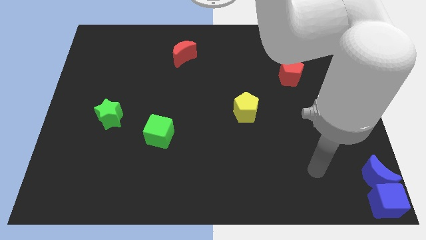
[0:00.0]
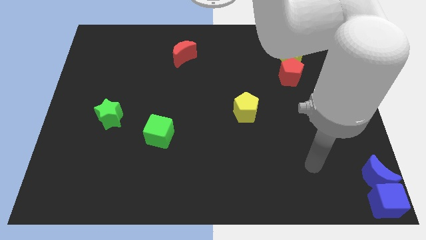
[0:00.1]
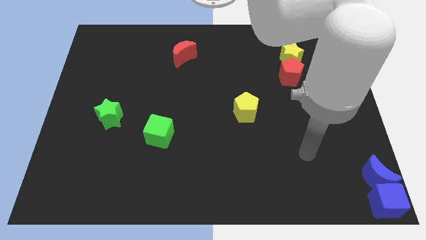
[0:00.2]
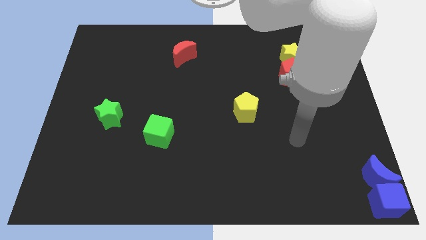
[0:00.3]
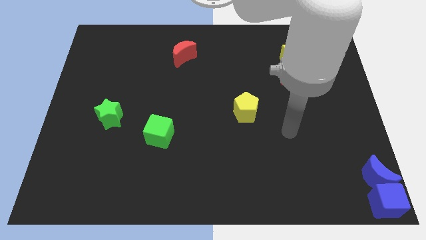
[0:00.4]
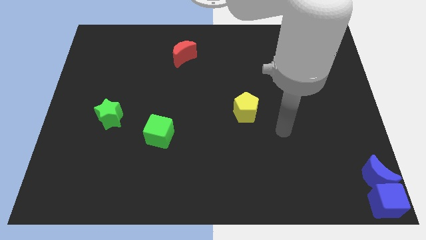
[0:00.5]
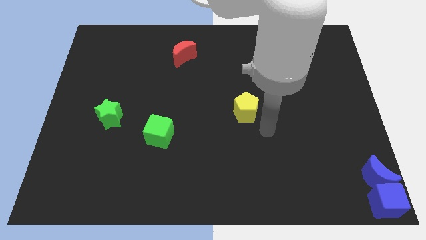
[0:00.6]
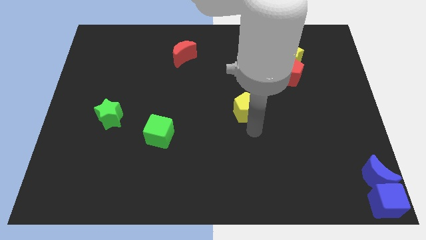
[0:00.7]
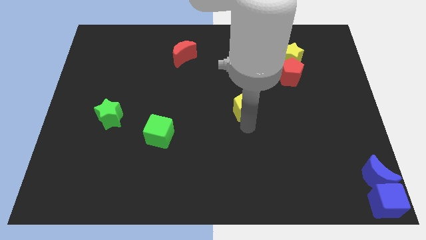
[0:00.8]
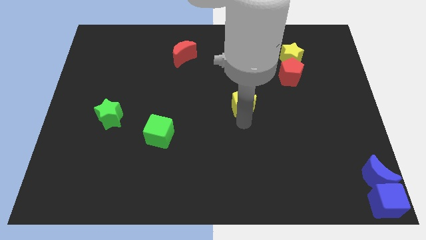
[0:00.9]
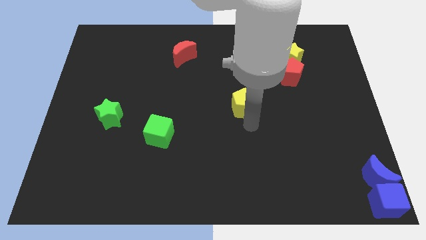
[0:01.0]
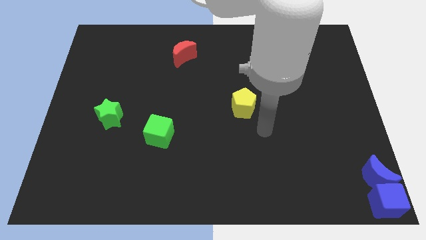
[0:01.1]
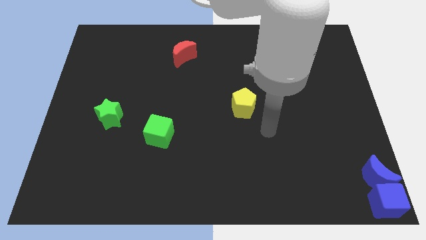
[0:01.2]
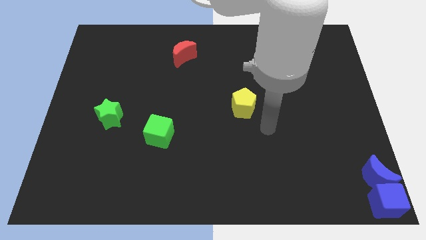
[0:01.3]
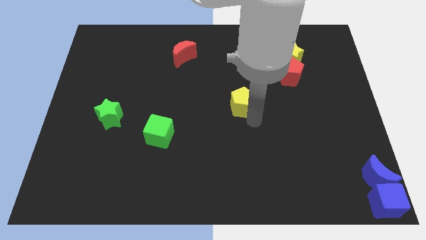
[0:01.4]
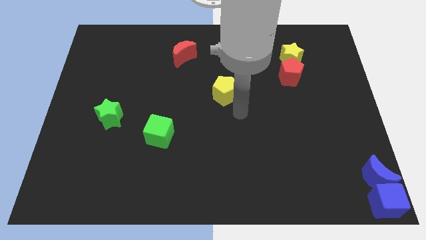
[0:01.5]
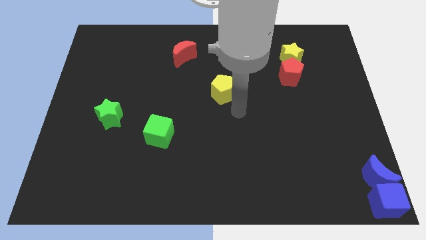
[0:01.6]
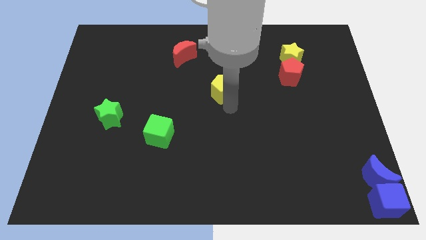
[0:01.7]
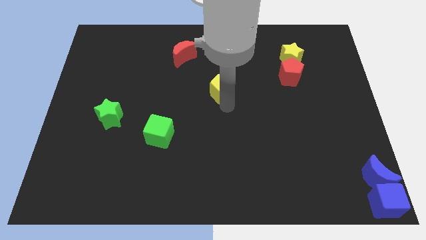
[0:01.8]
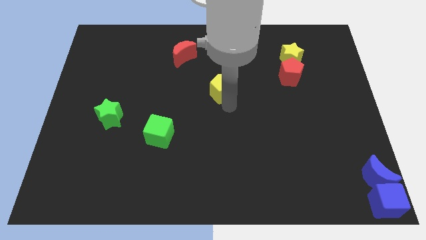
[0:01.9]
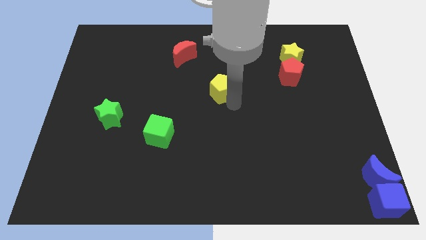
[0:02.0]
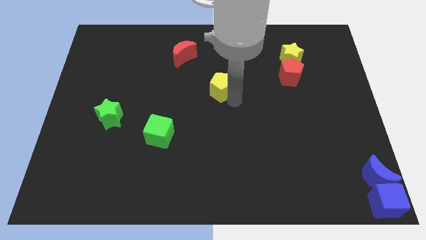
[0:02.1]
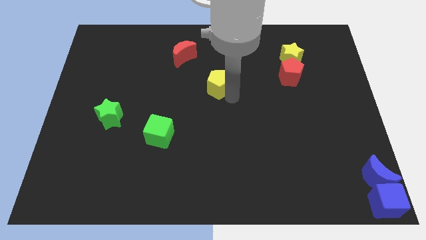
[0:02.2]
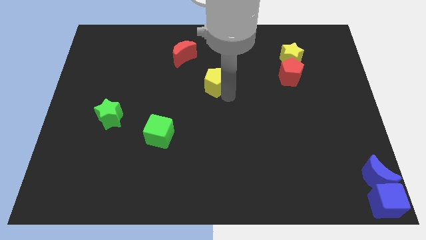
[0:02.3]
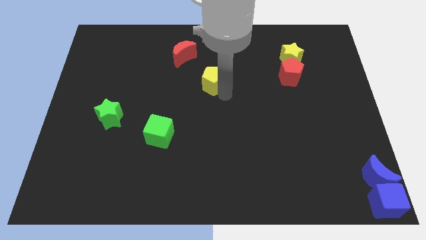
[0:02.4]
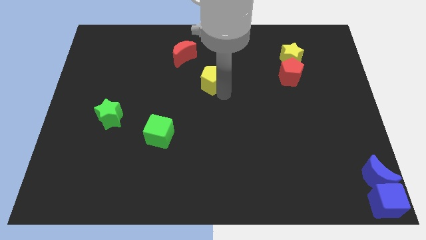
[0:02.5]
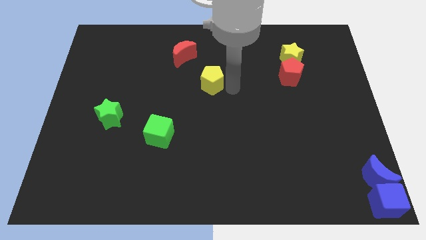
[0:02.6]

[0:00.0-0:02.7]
move the yellow pentagon up slightly

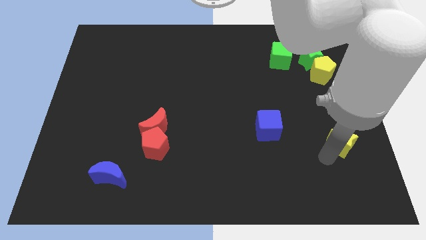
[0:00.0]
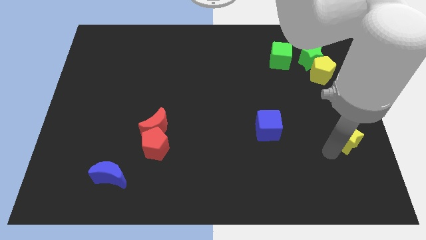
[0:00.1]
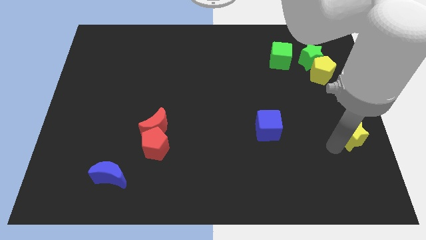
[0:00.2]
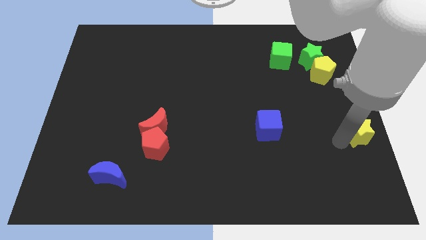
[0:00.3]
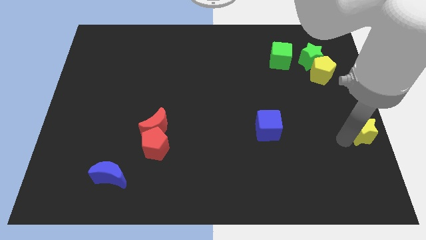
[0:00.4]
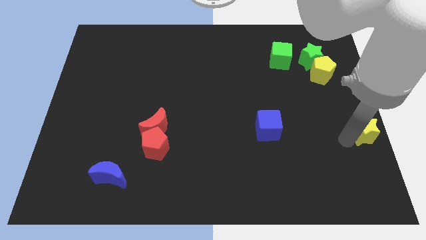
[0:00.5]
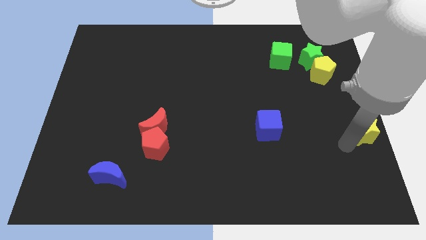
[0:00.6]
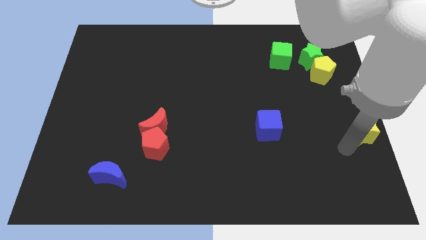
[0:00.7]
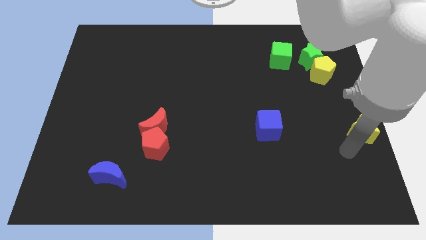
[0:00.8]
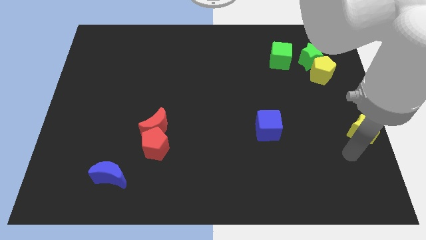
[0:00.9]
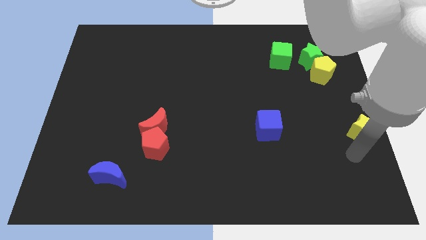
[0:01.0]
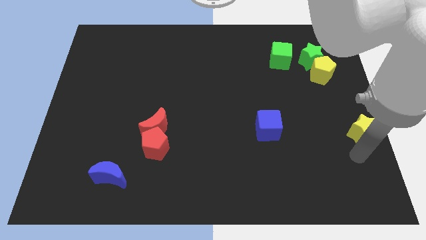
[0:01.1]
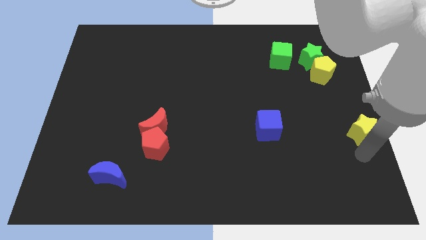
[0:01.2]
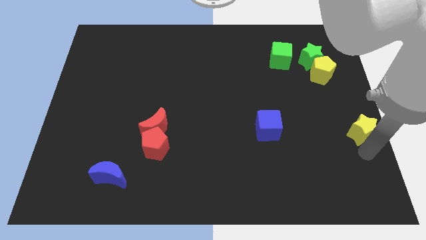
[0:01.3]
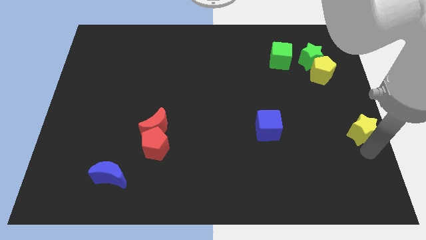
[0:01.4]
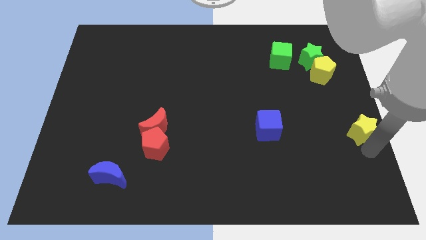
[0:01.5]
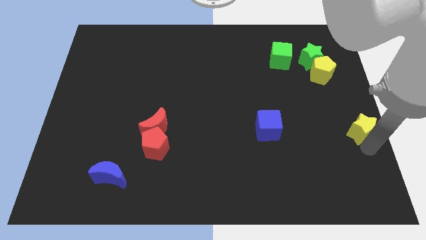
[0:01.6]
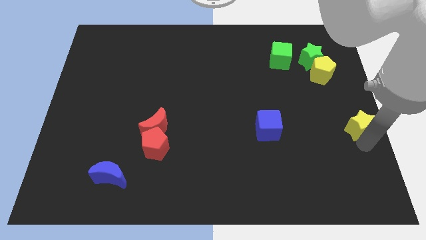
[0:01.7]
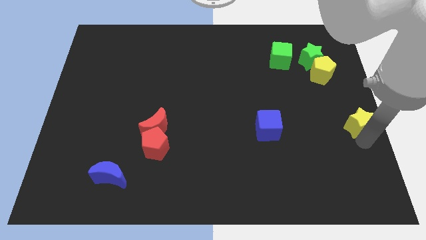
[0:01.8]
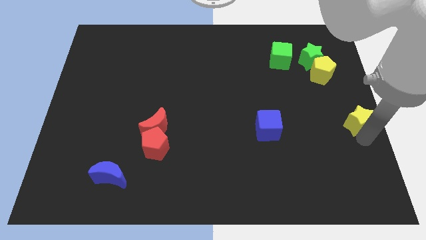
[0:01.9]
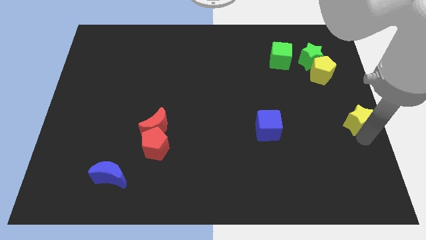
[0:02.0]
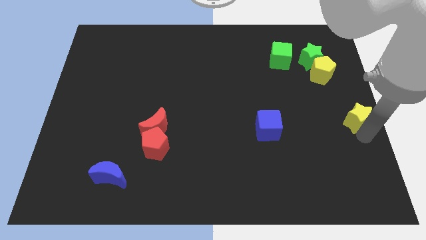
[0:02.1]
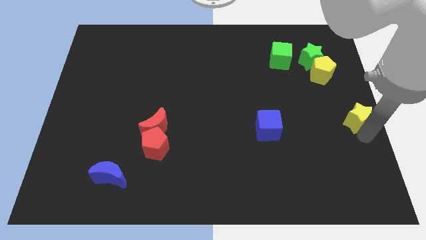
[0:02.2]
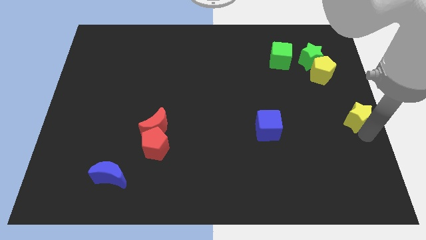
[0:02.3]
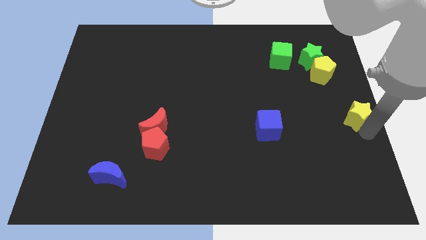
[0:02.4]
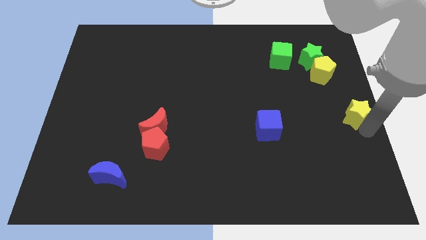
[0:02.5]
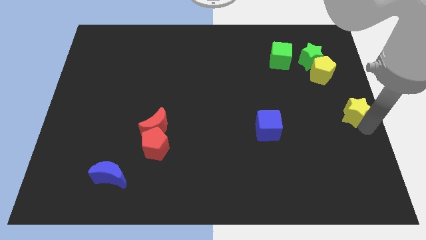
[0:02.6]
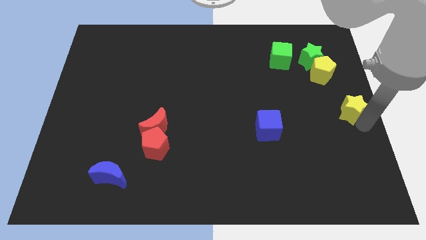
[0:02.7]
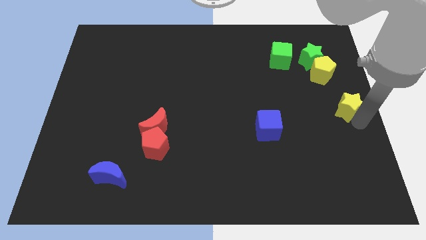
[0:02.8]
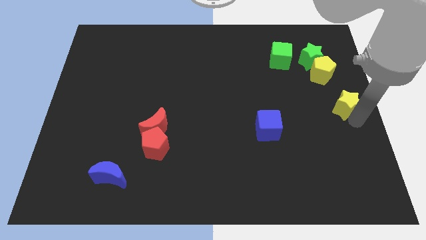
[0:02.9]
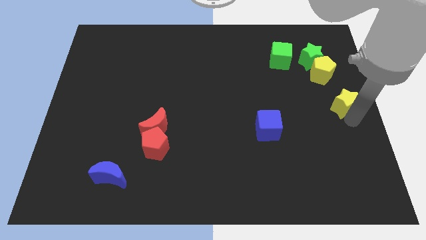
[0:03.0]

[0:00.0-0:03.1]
push the yellow star towards the center right of the board

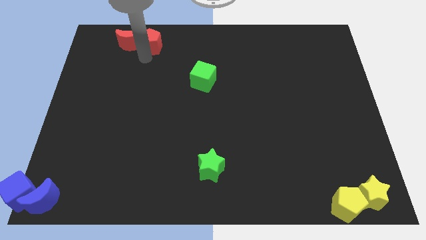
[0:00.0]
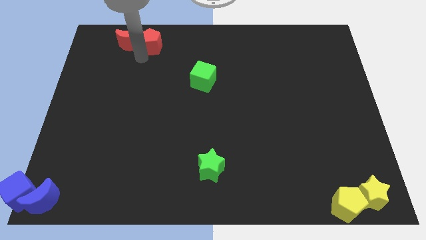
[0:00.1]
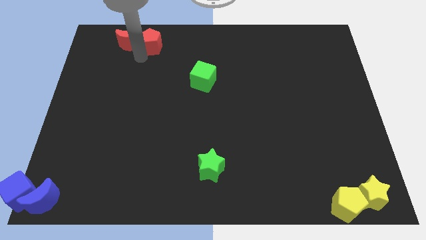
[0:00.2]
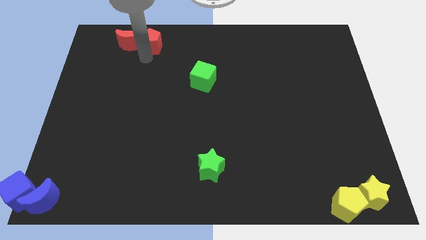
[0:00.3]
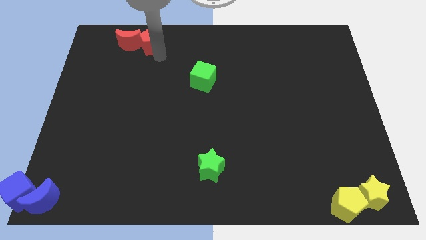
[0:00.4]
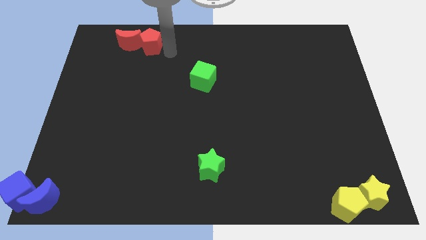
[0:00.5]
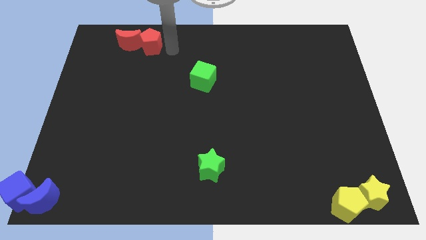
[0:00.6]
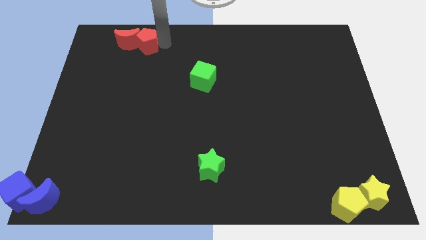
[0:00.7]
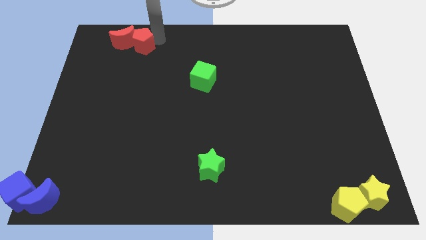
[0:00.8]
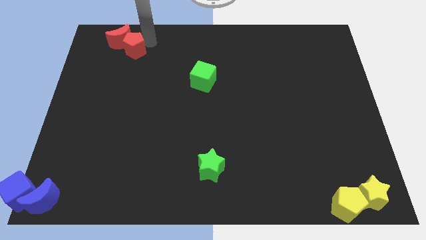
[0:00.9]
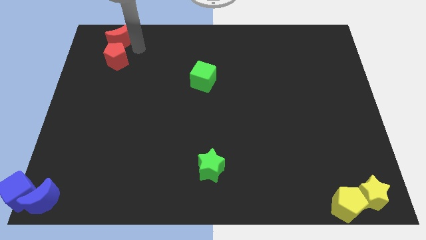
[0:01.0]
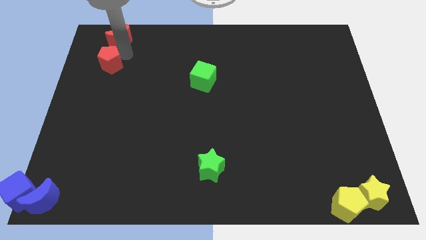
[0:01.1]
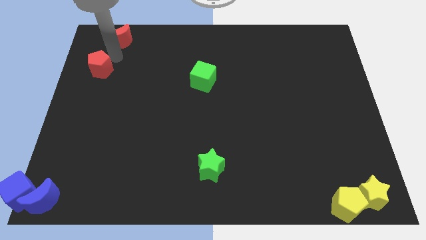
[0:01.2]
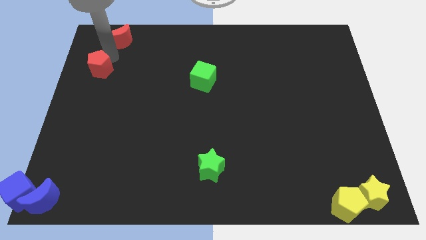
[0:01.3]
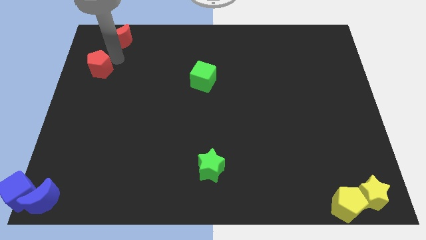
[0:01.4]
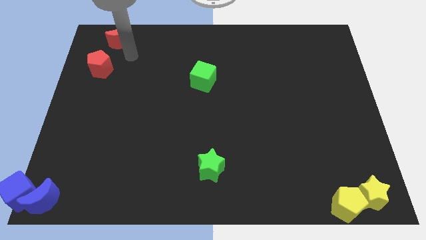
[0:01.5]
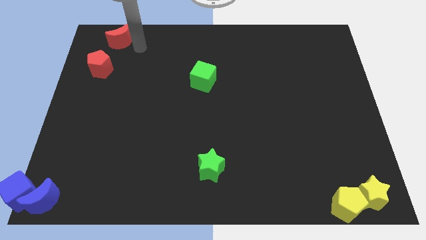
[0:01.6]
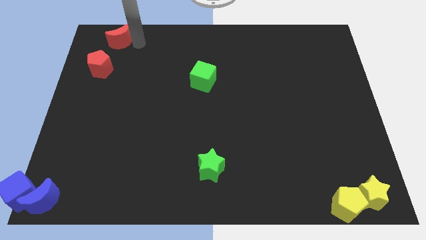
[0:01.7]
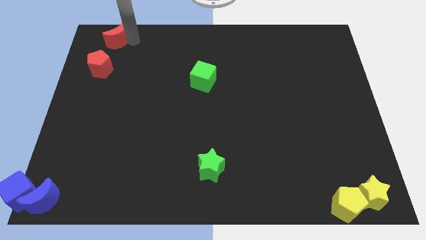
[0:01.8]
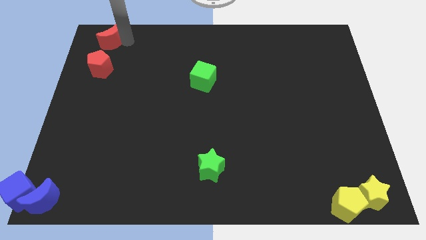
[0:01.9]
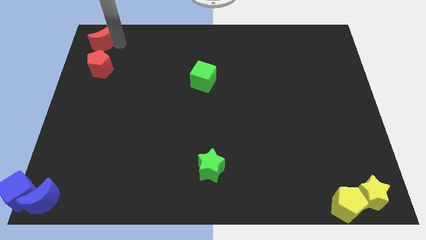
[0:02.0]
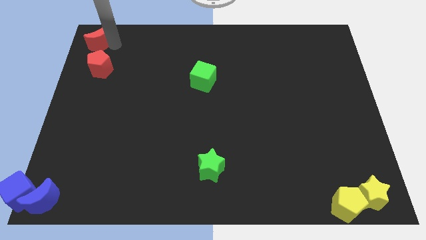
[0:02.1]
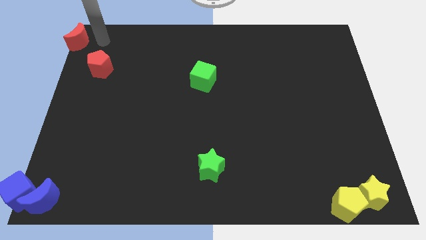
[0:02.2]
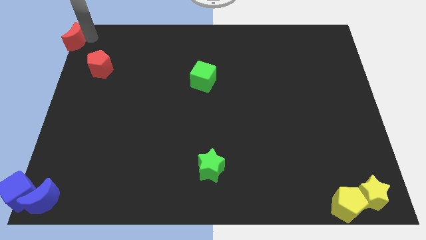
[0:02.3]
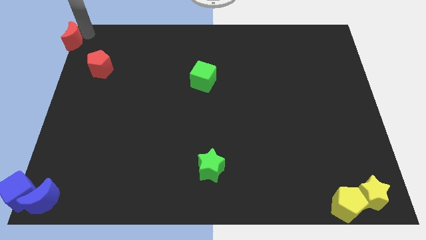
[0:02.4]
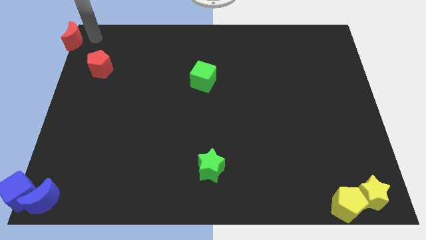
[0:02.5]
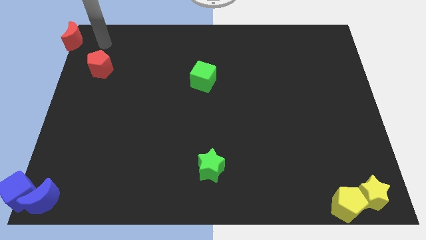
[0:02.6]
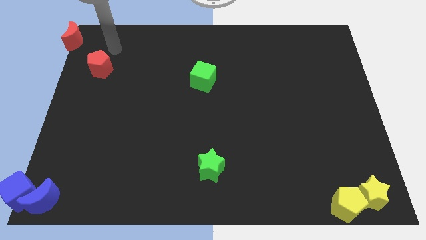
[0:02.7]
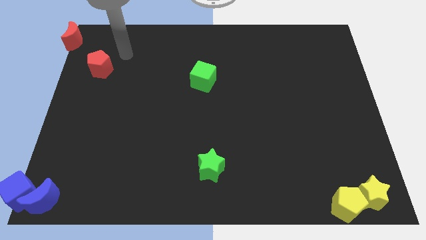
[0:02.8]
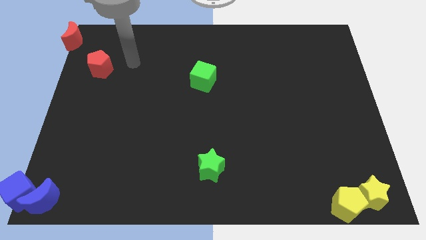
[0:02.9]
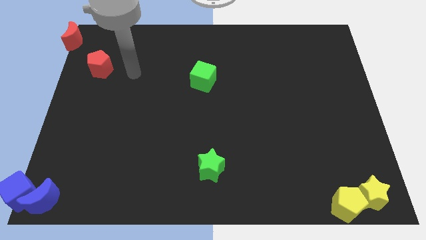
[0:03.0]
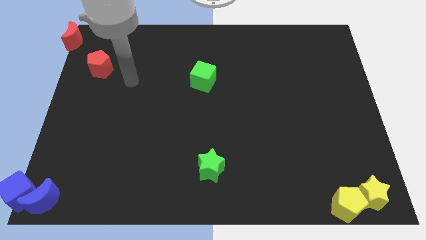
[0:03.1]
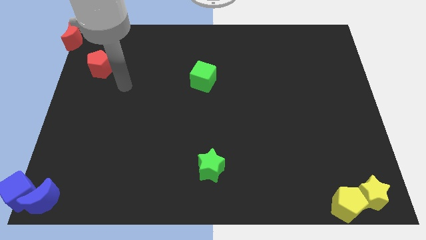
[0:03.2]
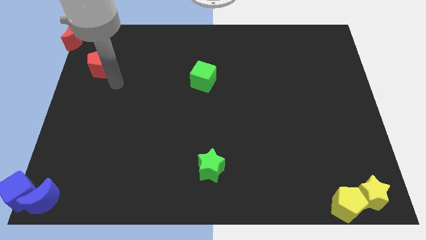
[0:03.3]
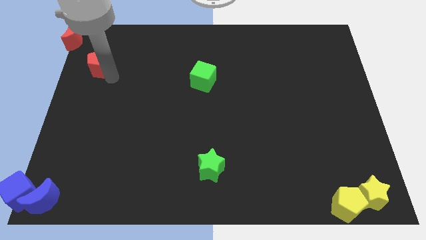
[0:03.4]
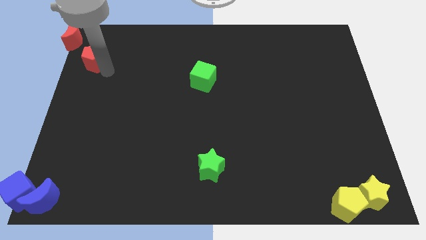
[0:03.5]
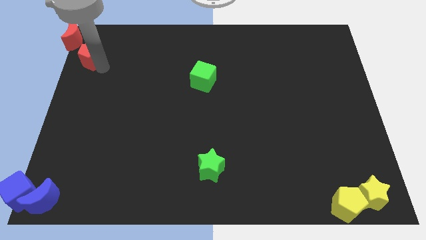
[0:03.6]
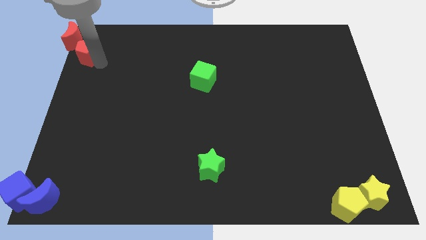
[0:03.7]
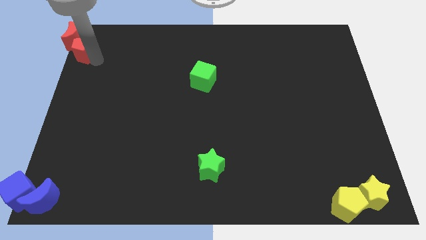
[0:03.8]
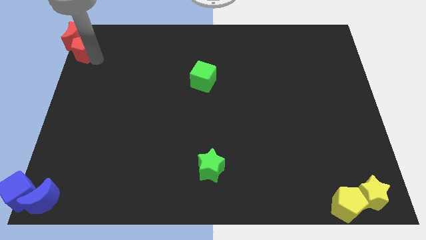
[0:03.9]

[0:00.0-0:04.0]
push red pentagon and red crescent to the top left corner
